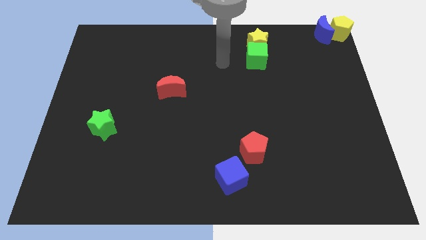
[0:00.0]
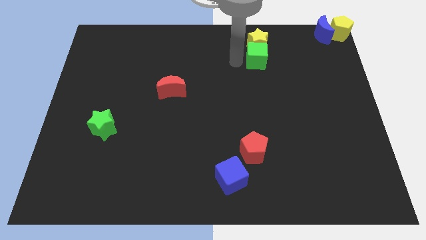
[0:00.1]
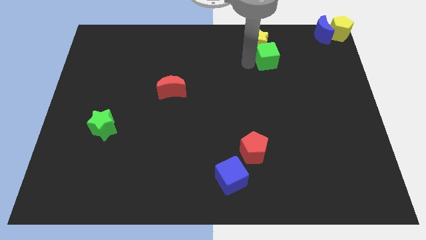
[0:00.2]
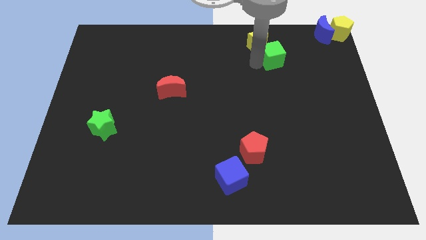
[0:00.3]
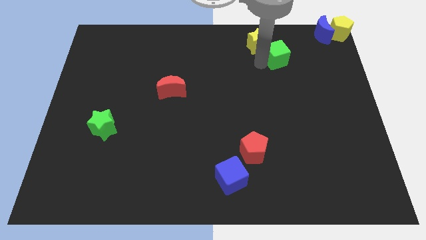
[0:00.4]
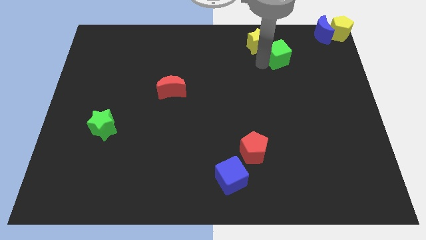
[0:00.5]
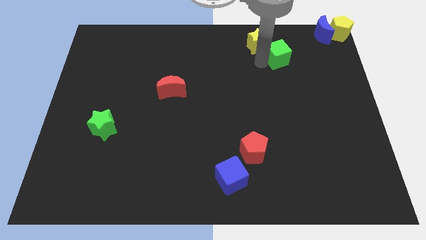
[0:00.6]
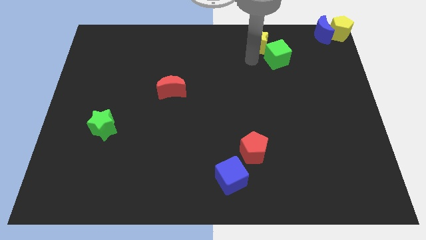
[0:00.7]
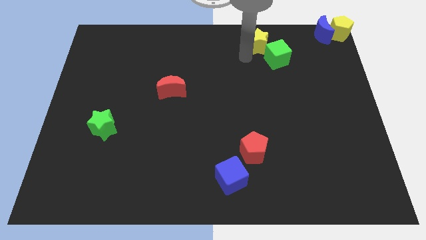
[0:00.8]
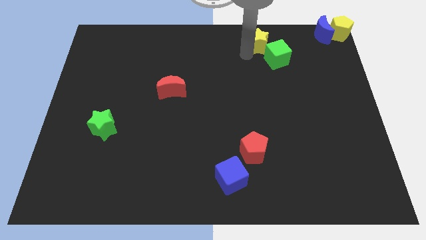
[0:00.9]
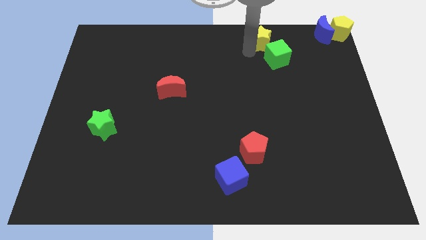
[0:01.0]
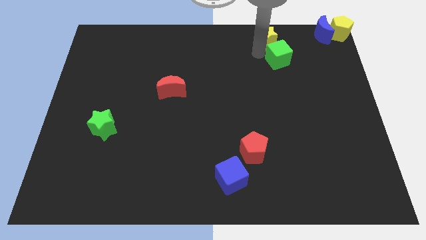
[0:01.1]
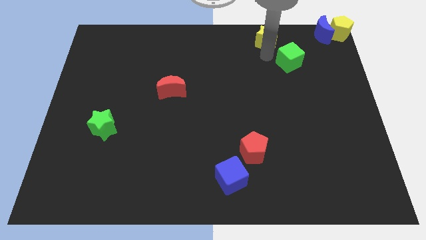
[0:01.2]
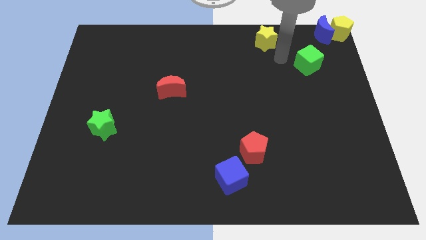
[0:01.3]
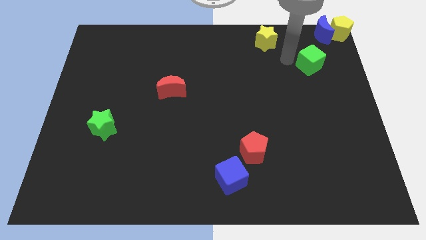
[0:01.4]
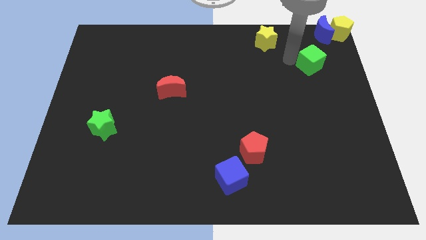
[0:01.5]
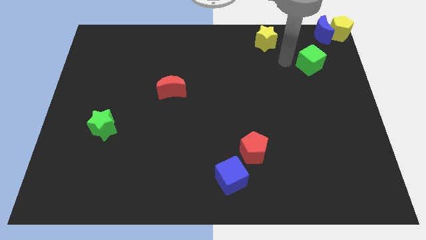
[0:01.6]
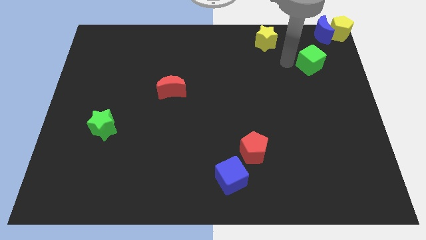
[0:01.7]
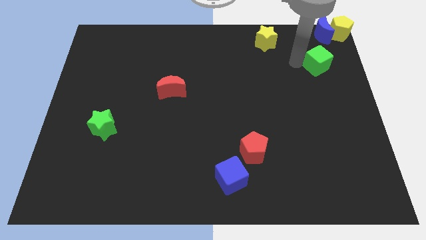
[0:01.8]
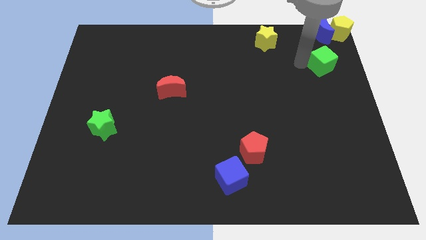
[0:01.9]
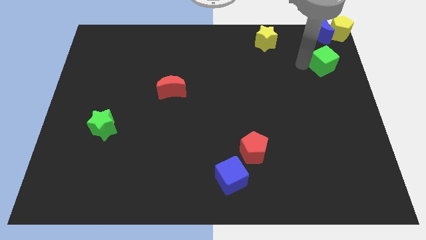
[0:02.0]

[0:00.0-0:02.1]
move green cube towards top right side

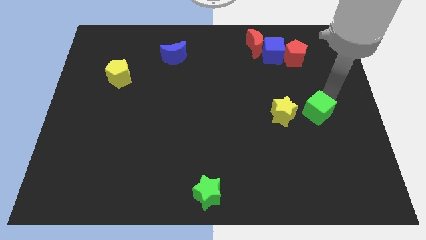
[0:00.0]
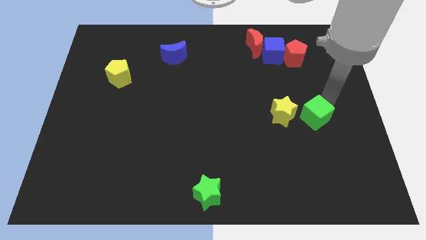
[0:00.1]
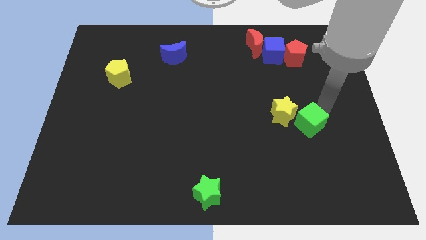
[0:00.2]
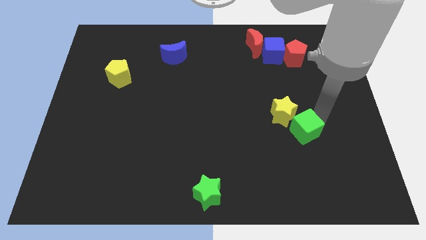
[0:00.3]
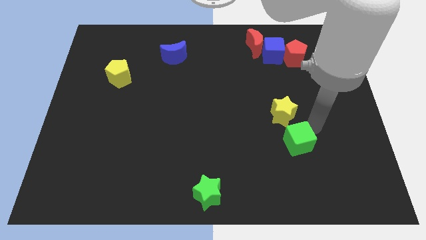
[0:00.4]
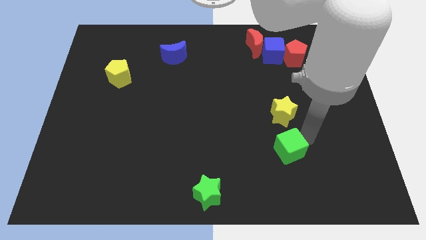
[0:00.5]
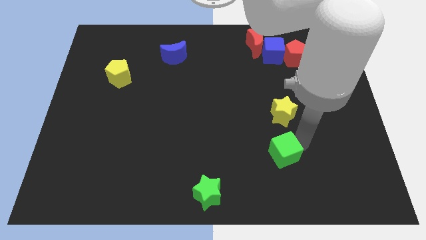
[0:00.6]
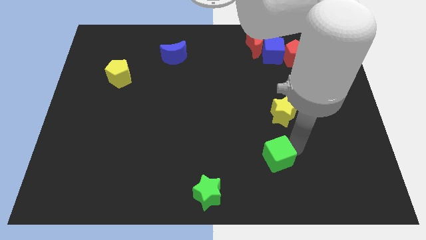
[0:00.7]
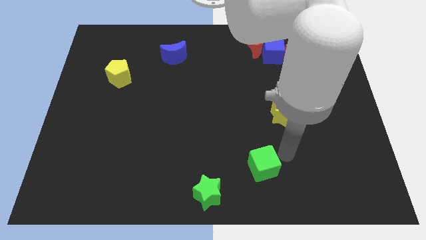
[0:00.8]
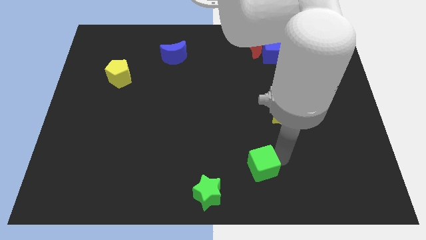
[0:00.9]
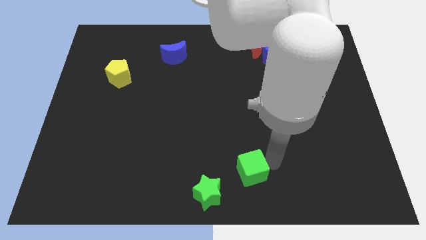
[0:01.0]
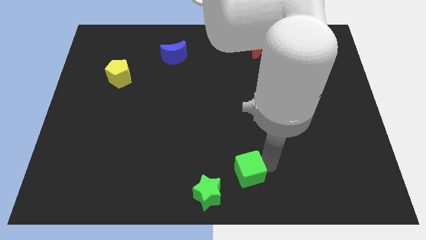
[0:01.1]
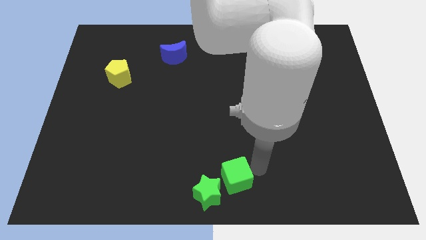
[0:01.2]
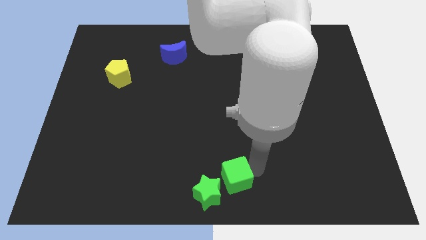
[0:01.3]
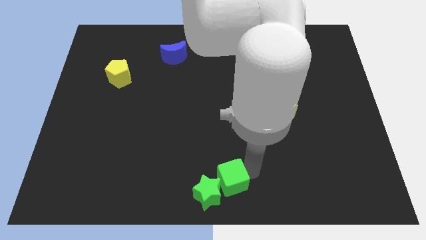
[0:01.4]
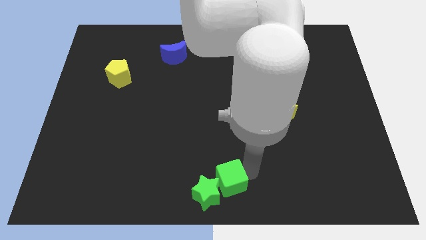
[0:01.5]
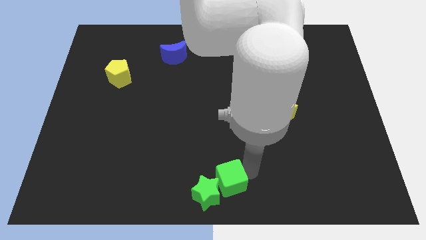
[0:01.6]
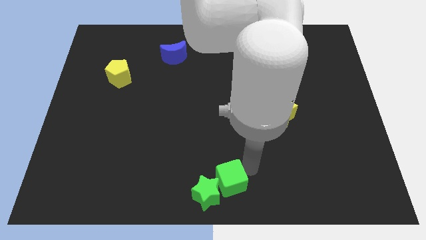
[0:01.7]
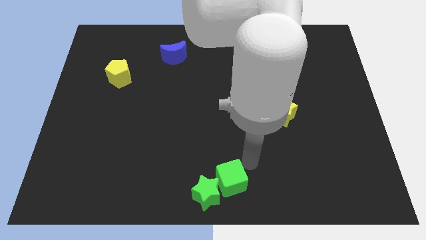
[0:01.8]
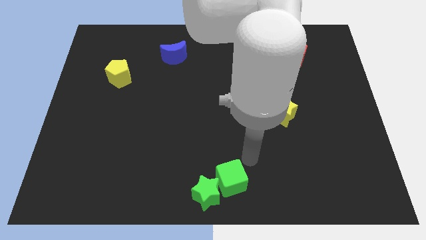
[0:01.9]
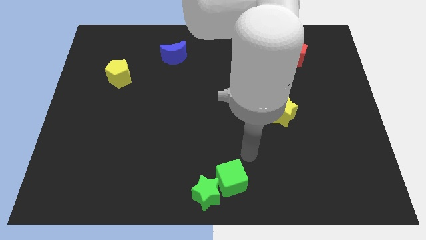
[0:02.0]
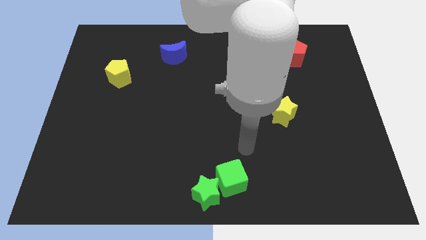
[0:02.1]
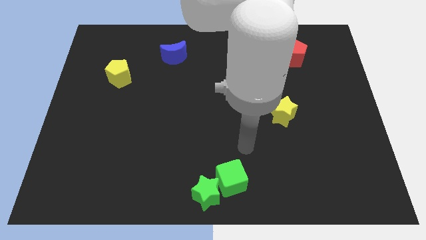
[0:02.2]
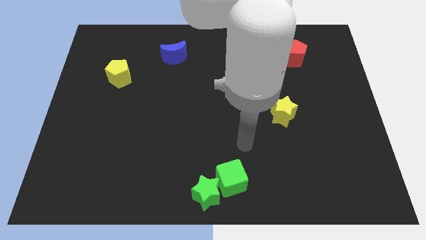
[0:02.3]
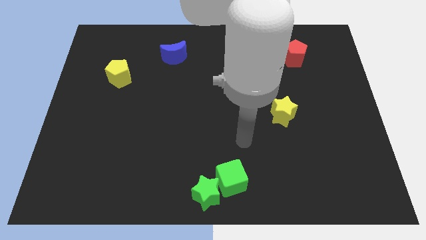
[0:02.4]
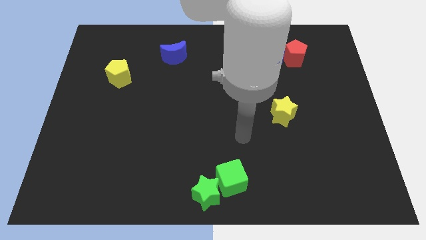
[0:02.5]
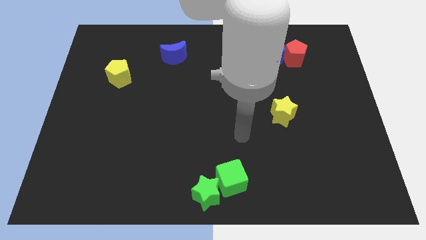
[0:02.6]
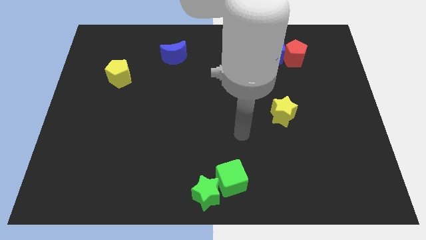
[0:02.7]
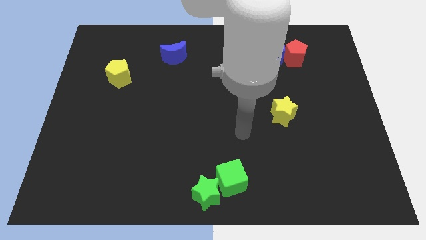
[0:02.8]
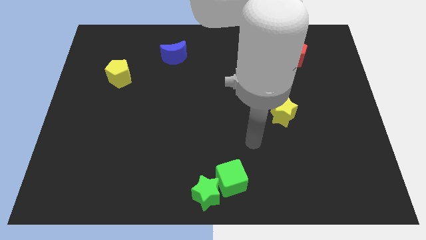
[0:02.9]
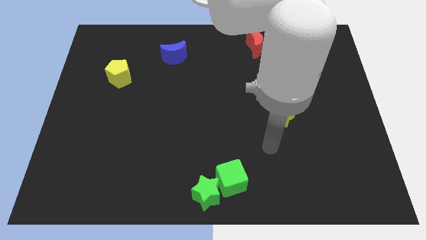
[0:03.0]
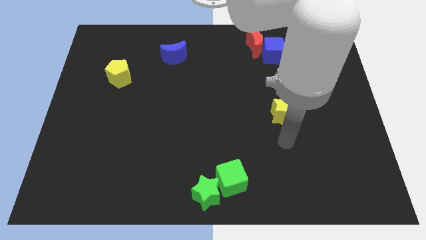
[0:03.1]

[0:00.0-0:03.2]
push the green cube into the green star

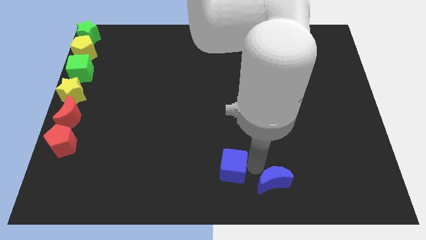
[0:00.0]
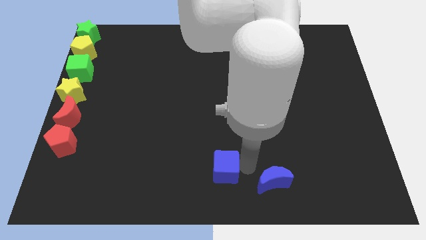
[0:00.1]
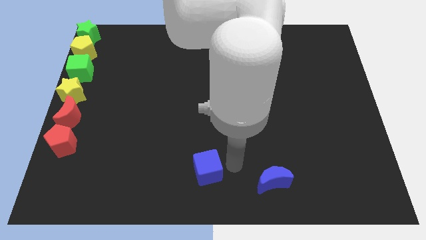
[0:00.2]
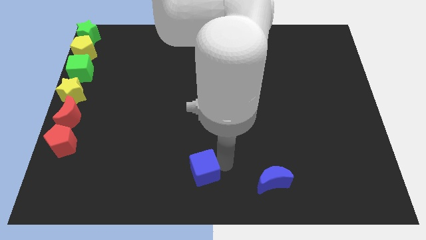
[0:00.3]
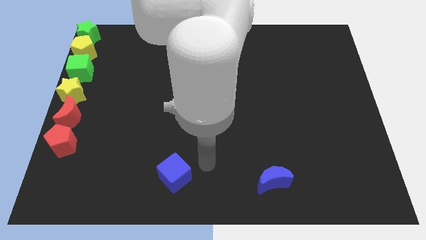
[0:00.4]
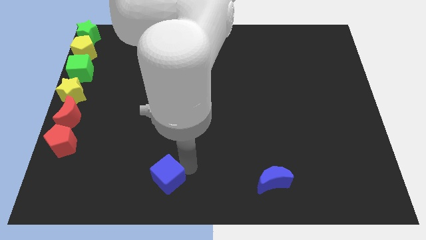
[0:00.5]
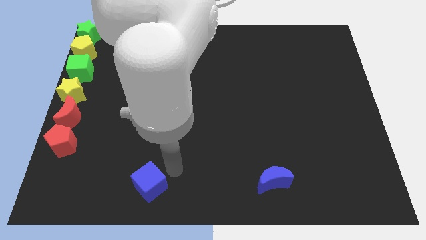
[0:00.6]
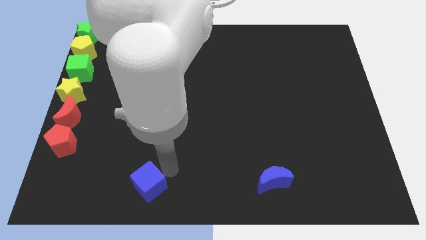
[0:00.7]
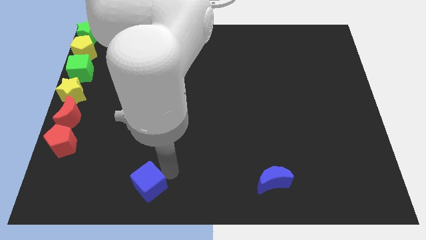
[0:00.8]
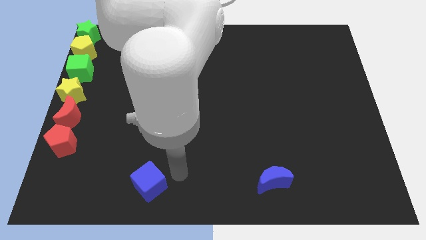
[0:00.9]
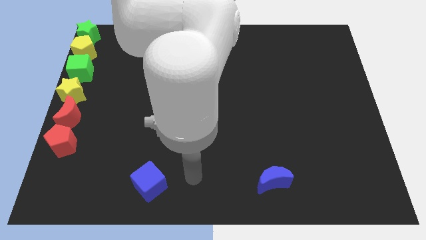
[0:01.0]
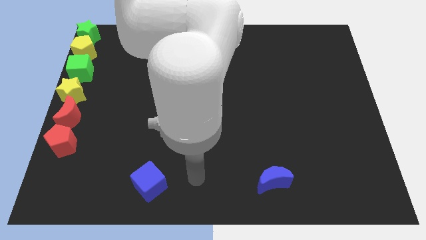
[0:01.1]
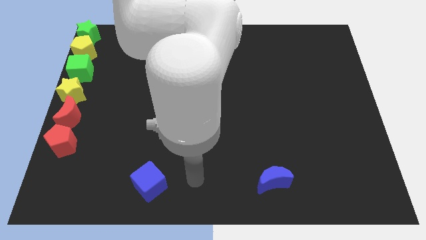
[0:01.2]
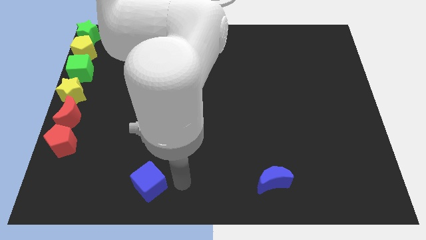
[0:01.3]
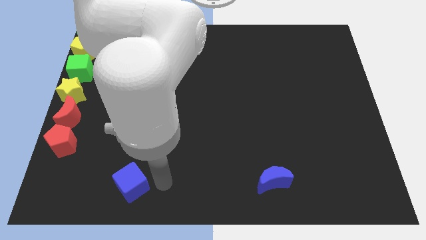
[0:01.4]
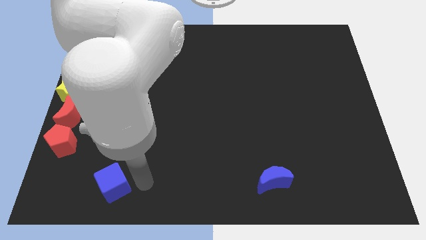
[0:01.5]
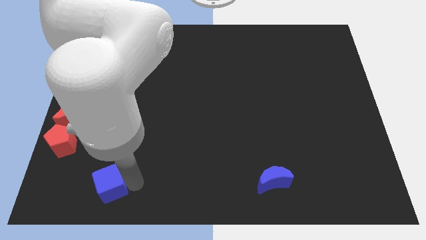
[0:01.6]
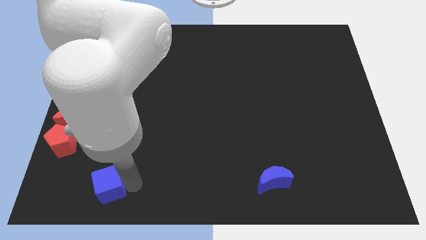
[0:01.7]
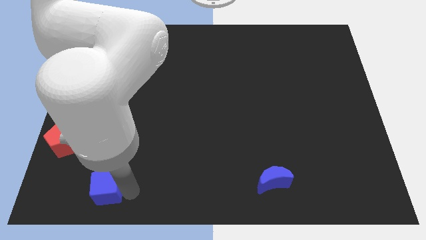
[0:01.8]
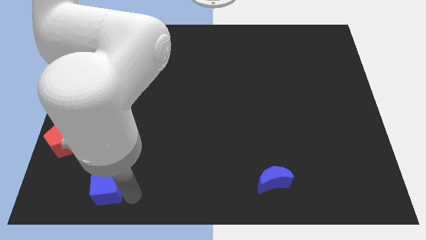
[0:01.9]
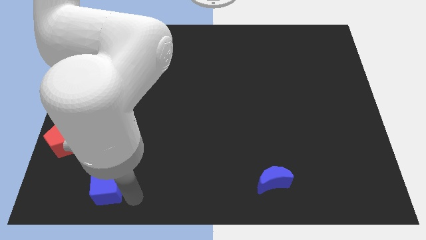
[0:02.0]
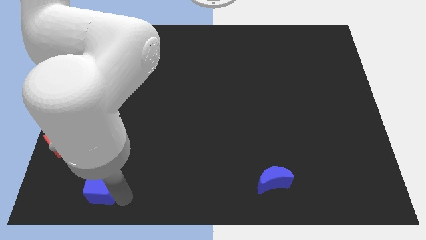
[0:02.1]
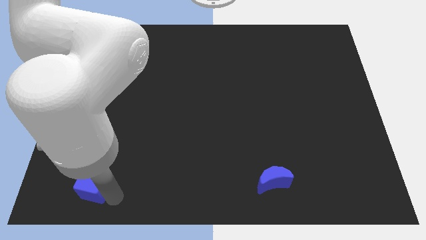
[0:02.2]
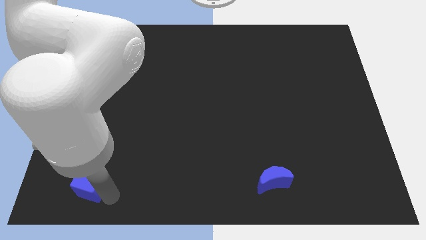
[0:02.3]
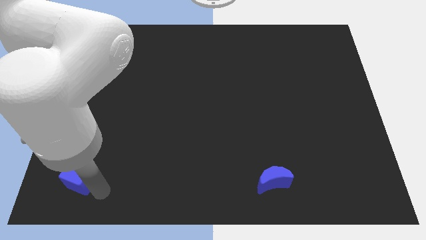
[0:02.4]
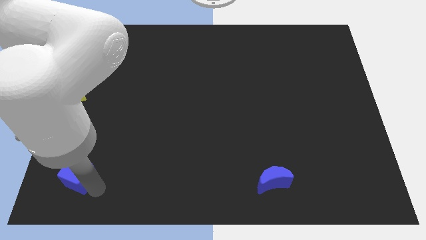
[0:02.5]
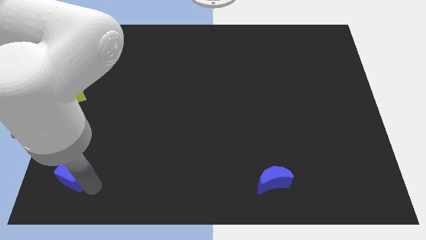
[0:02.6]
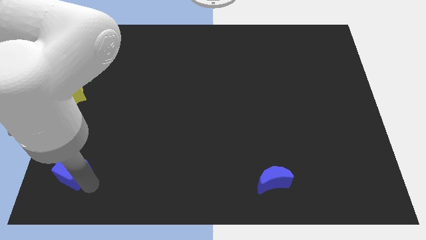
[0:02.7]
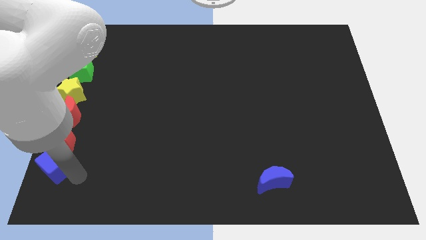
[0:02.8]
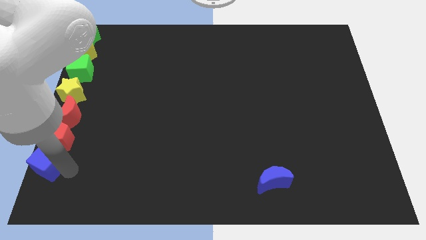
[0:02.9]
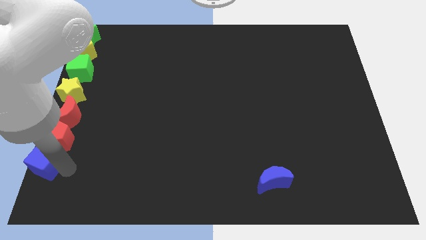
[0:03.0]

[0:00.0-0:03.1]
place blue cube below the red pentgaon
